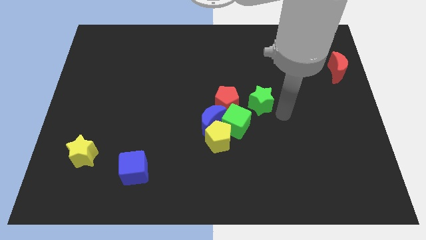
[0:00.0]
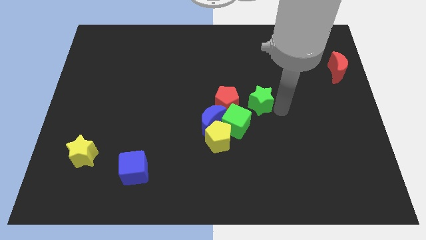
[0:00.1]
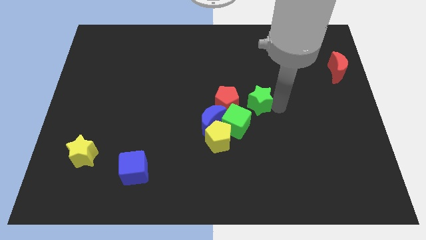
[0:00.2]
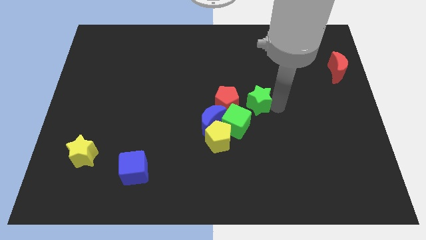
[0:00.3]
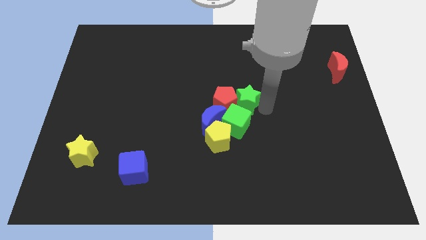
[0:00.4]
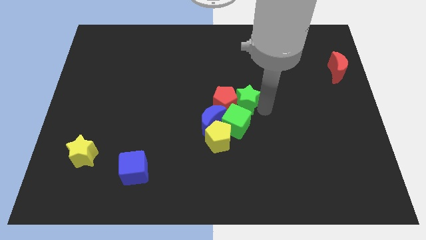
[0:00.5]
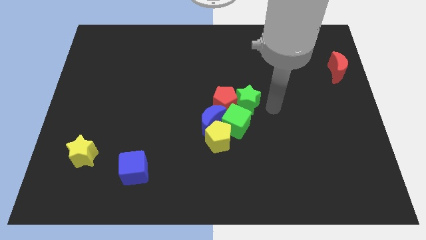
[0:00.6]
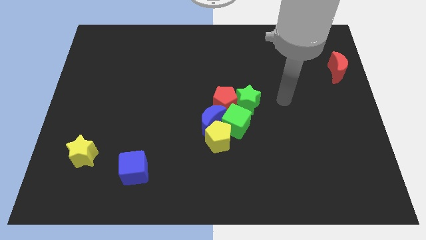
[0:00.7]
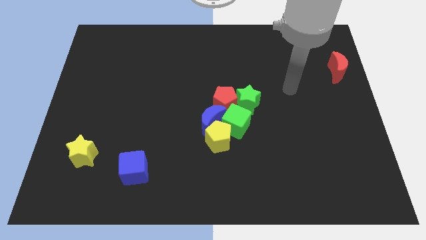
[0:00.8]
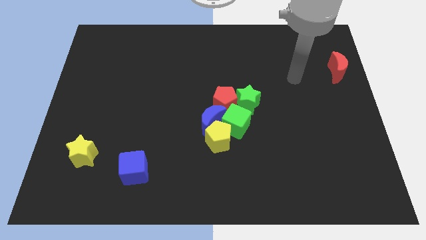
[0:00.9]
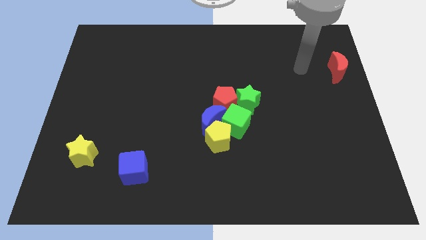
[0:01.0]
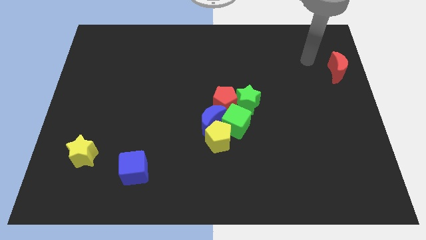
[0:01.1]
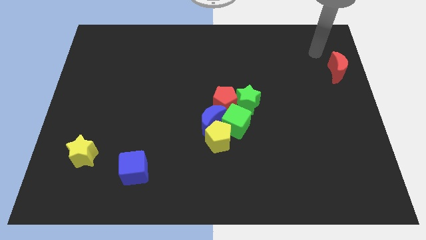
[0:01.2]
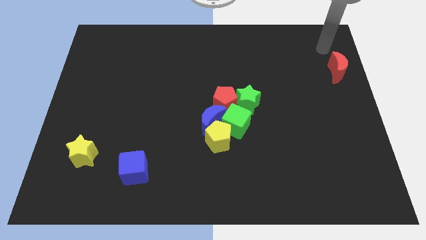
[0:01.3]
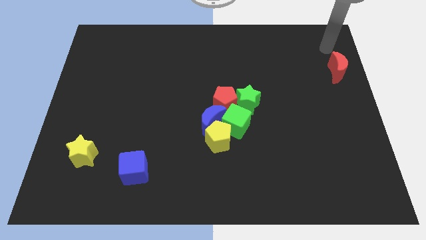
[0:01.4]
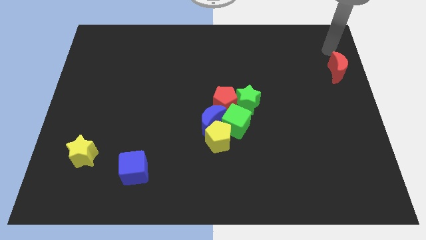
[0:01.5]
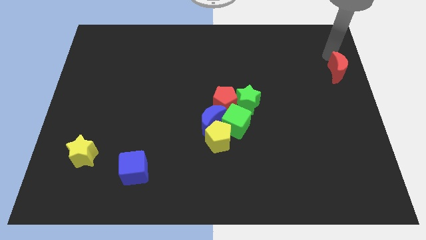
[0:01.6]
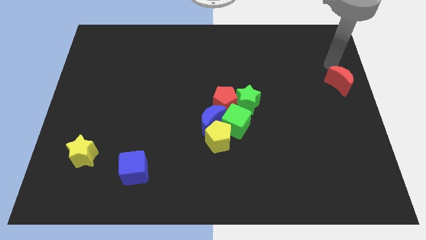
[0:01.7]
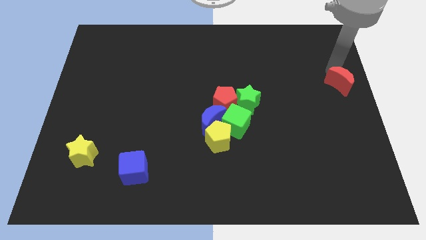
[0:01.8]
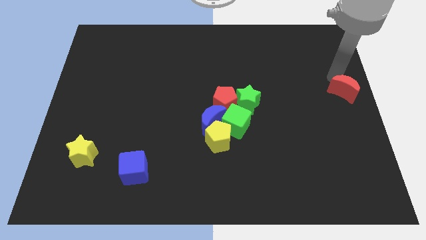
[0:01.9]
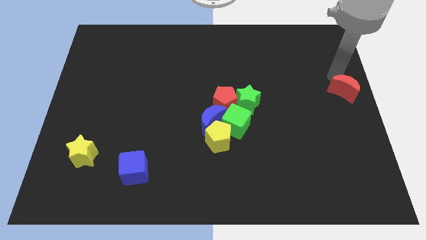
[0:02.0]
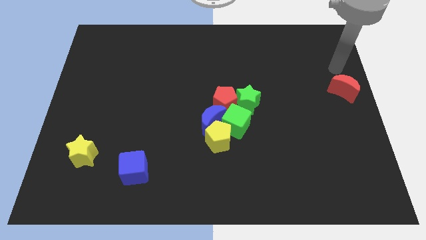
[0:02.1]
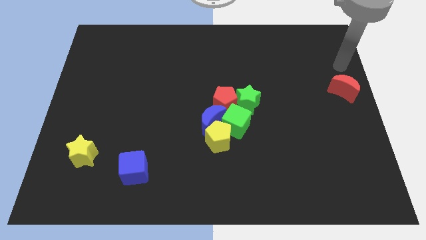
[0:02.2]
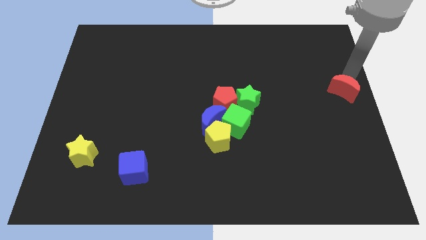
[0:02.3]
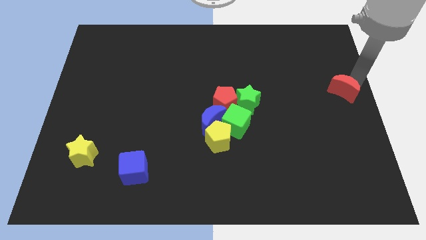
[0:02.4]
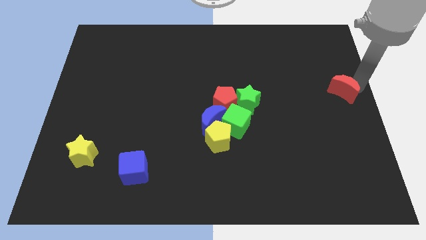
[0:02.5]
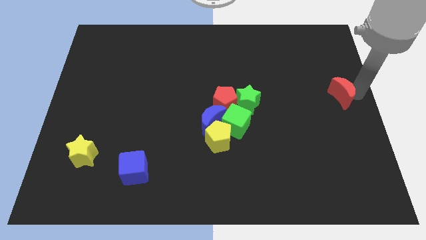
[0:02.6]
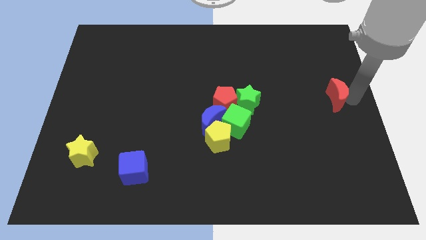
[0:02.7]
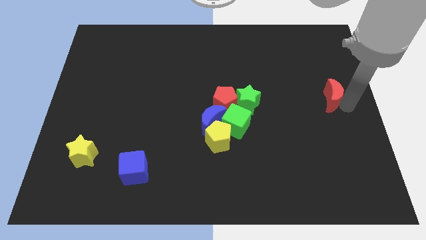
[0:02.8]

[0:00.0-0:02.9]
move the red moon to the center right

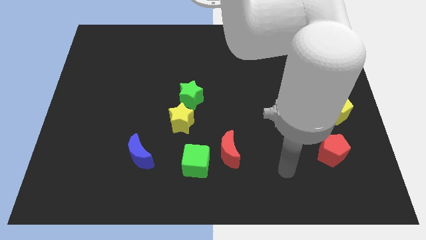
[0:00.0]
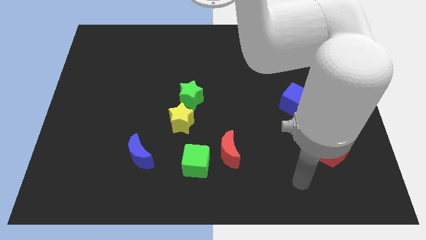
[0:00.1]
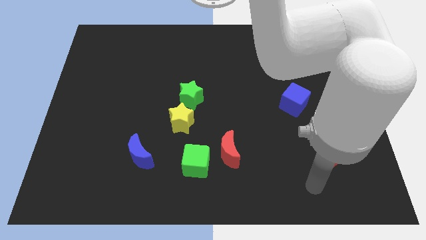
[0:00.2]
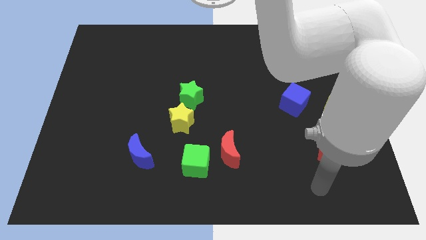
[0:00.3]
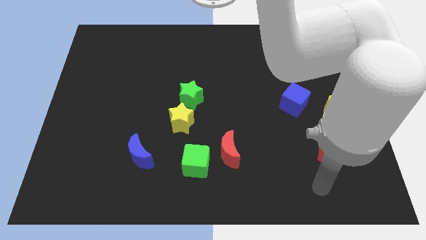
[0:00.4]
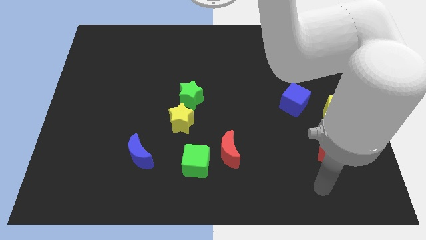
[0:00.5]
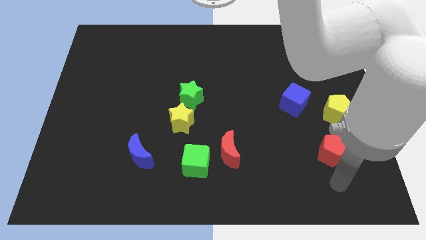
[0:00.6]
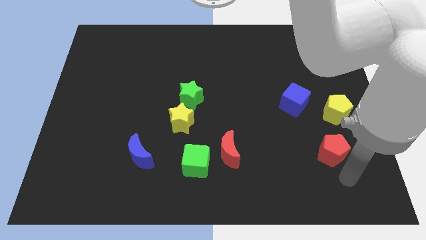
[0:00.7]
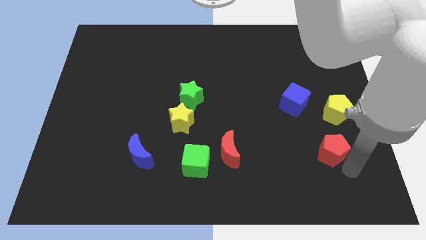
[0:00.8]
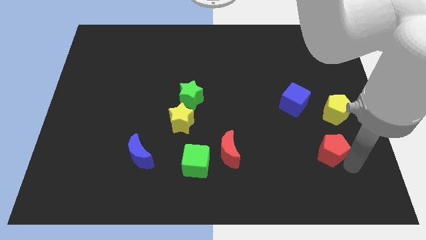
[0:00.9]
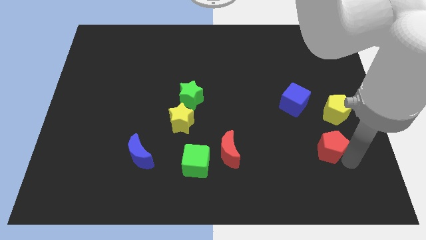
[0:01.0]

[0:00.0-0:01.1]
push the red pentagon slightly to the top

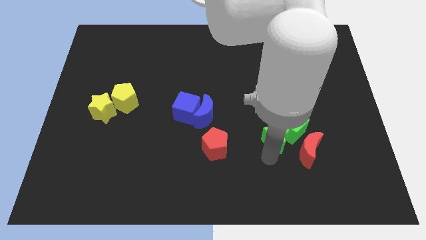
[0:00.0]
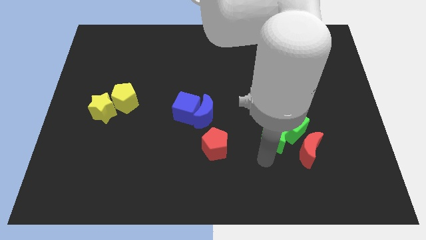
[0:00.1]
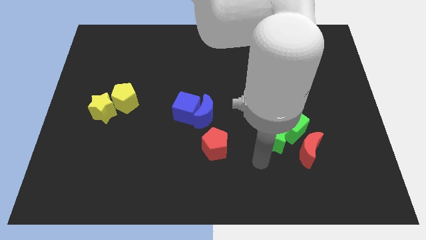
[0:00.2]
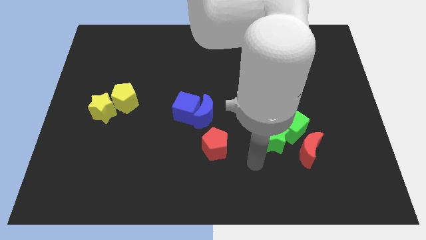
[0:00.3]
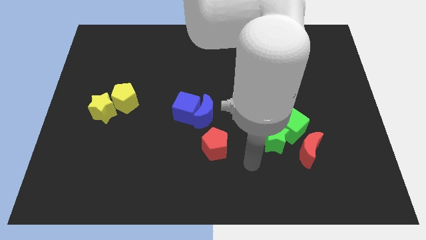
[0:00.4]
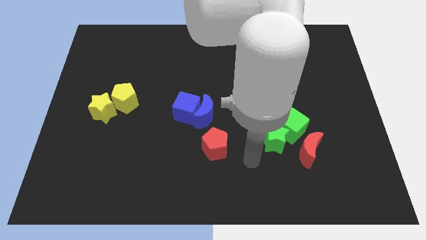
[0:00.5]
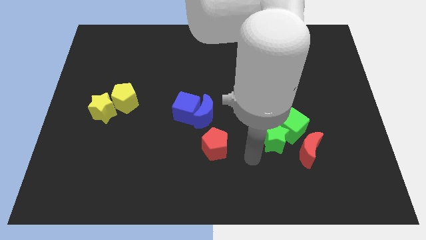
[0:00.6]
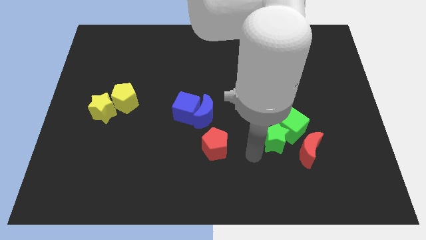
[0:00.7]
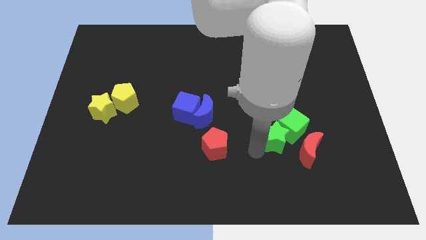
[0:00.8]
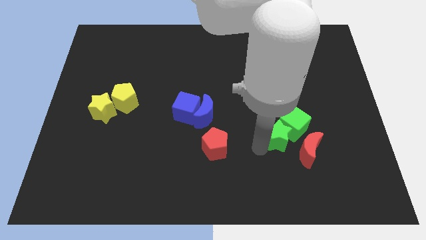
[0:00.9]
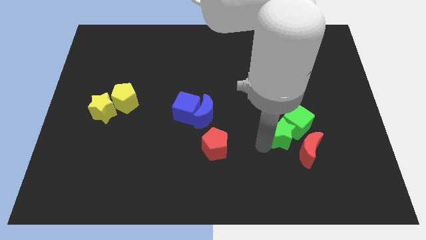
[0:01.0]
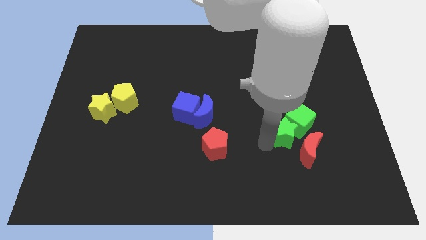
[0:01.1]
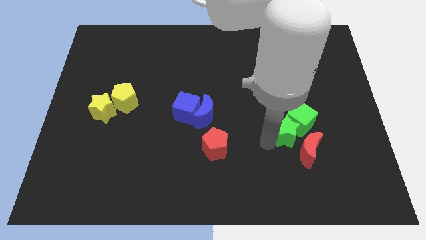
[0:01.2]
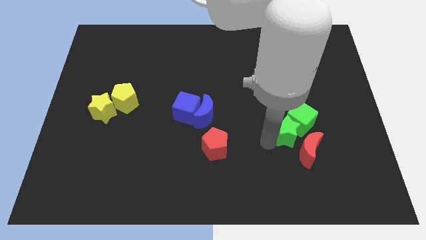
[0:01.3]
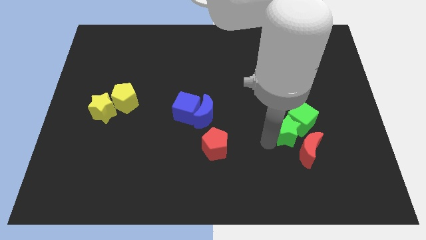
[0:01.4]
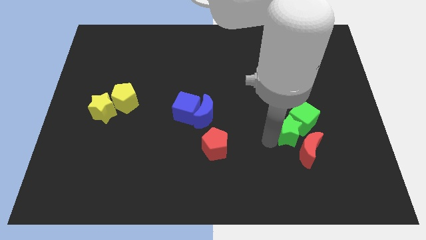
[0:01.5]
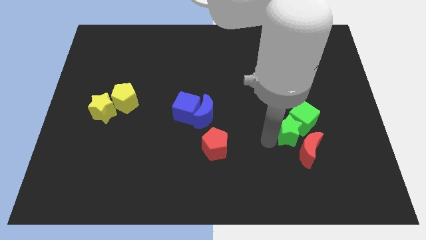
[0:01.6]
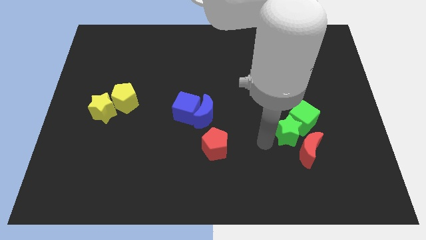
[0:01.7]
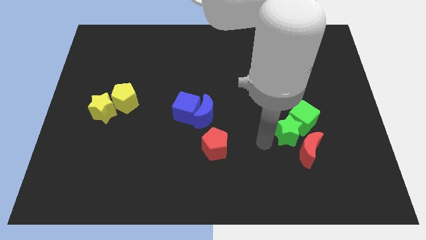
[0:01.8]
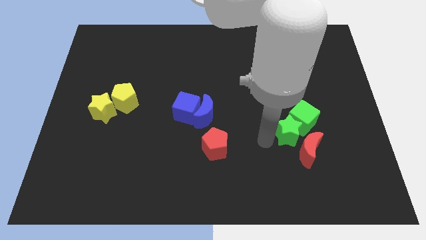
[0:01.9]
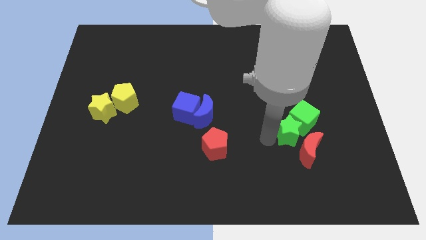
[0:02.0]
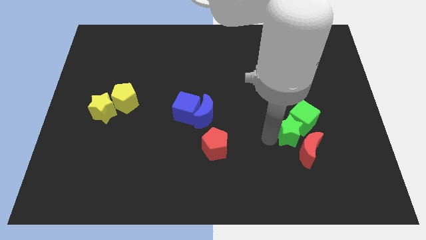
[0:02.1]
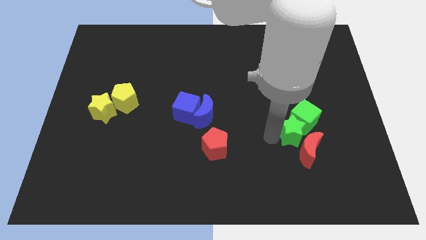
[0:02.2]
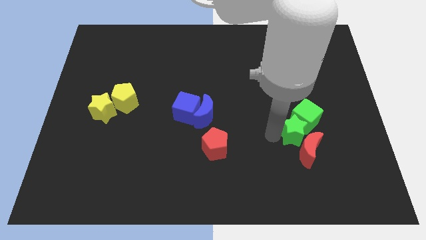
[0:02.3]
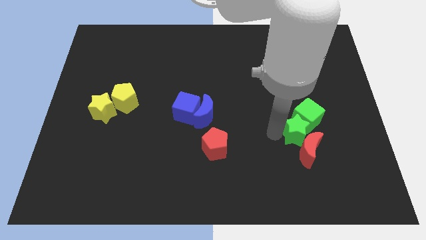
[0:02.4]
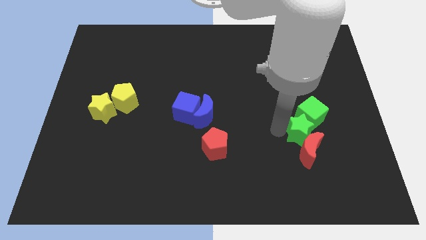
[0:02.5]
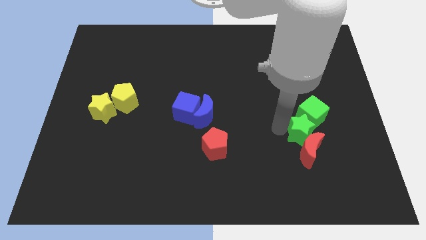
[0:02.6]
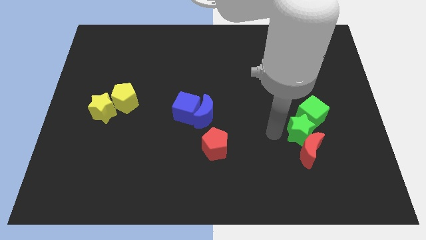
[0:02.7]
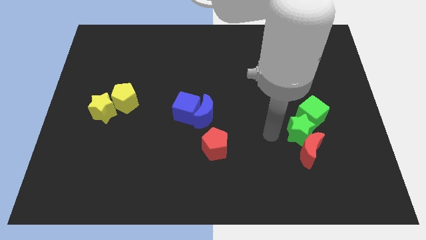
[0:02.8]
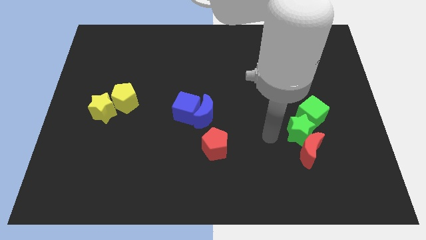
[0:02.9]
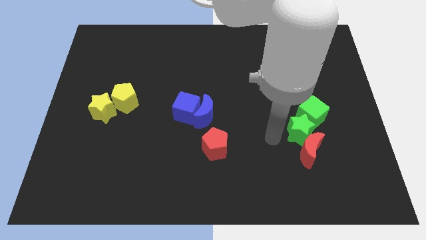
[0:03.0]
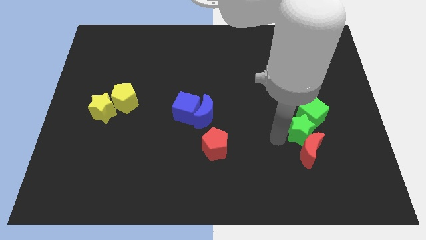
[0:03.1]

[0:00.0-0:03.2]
move the green blocks slightly right

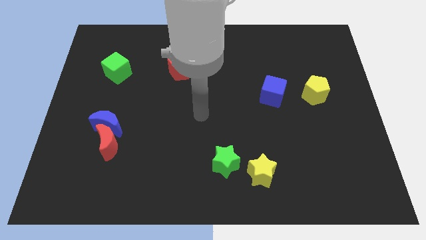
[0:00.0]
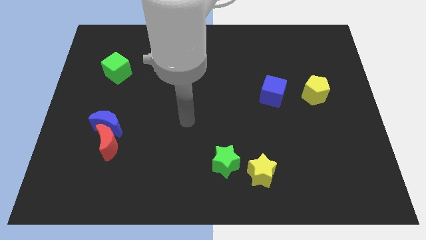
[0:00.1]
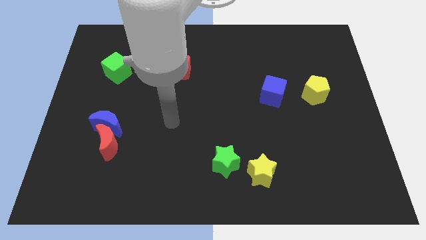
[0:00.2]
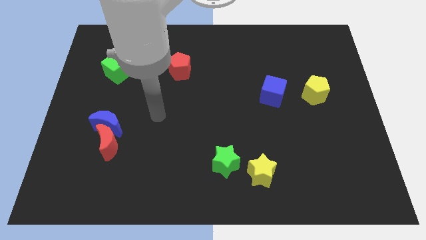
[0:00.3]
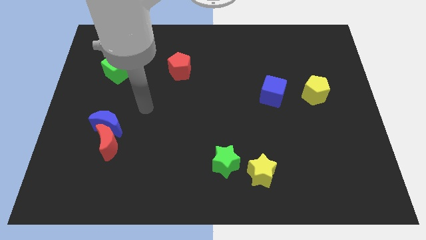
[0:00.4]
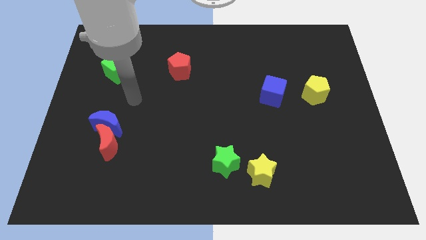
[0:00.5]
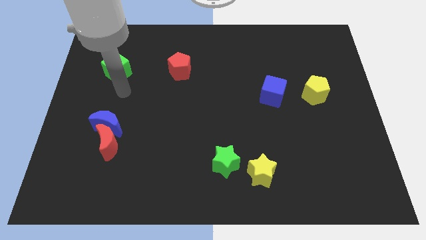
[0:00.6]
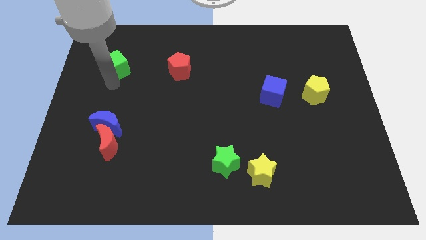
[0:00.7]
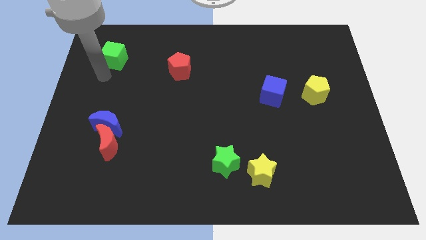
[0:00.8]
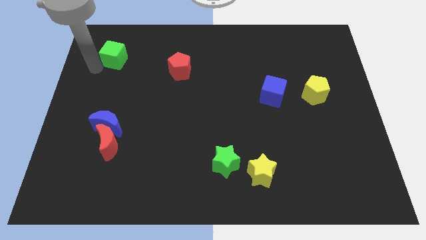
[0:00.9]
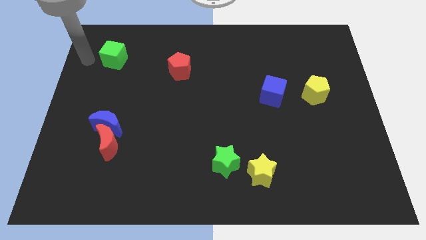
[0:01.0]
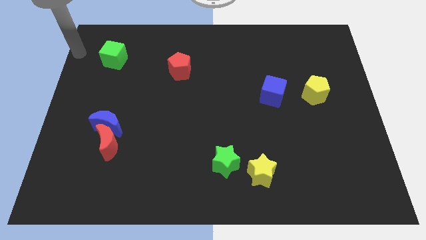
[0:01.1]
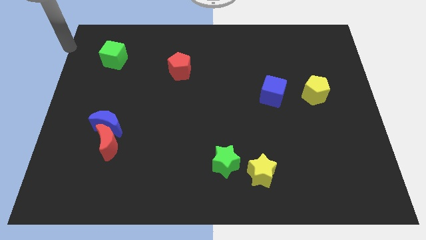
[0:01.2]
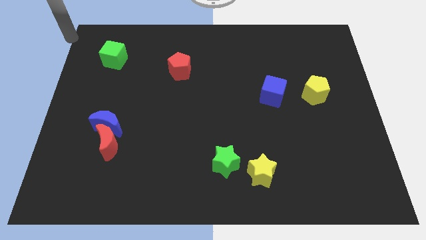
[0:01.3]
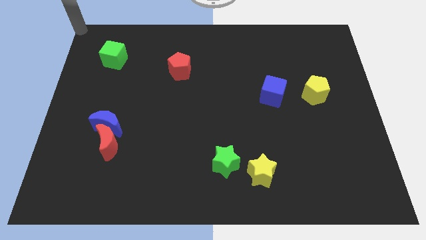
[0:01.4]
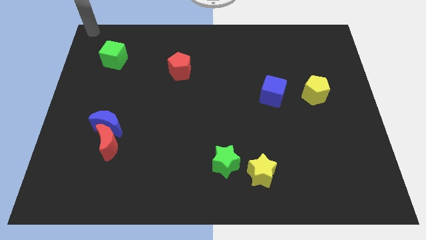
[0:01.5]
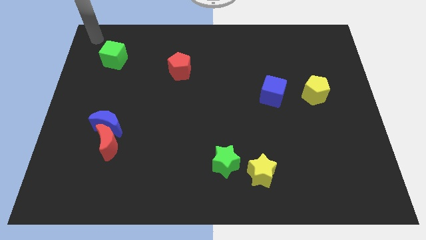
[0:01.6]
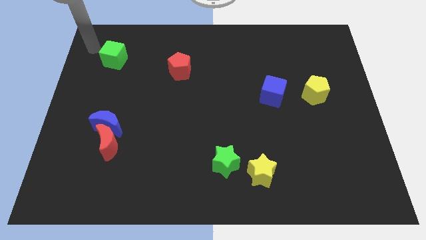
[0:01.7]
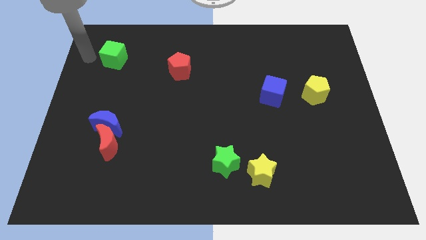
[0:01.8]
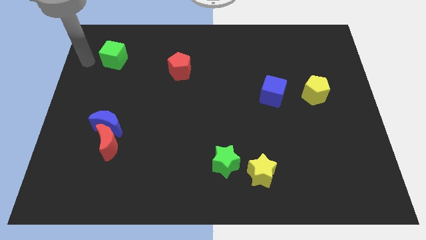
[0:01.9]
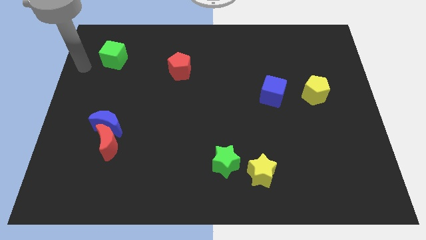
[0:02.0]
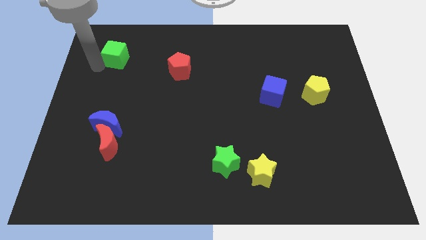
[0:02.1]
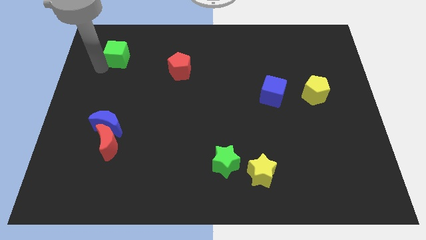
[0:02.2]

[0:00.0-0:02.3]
place the arm left to the green cube
